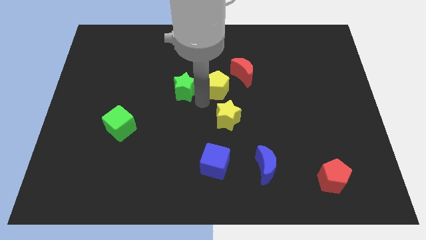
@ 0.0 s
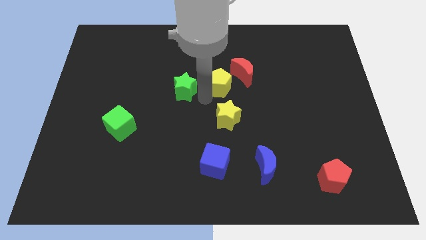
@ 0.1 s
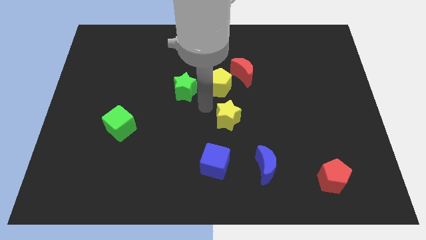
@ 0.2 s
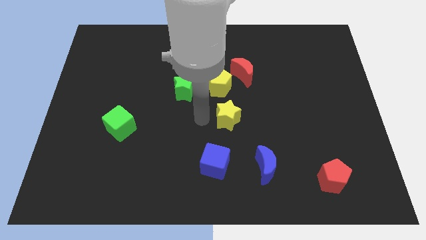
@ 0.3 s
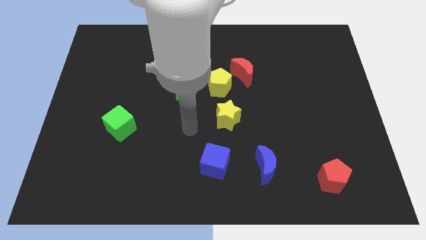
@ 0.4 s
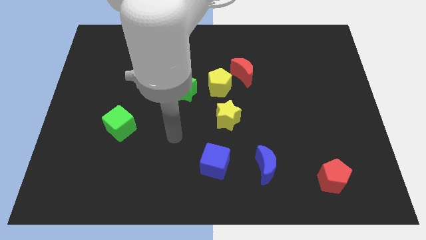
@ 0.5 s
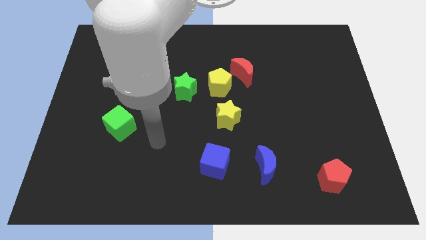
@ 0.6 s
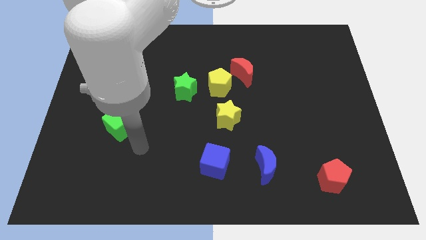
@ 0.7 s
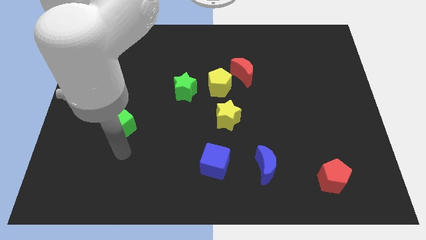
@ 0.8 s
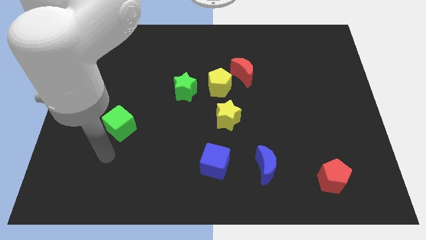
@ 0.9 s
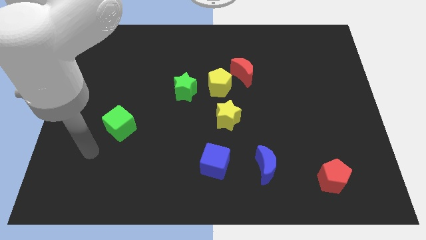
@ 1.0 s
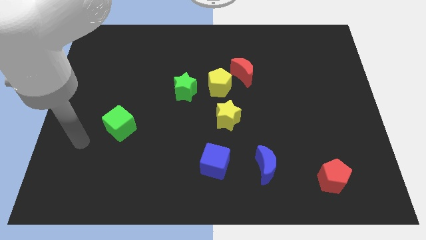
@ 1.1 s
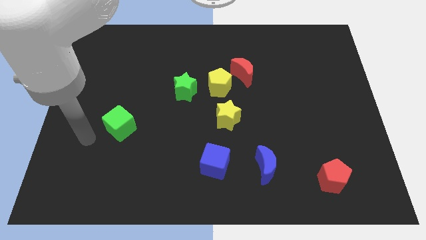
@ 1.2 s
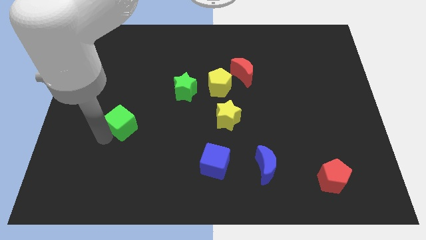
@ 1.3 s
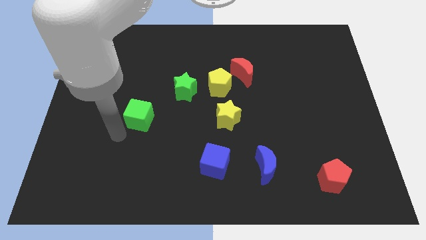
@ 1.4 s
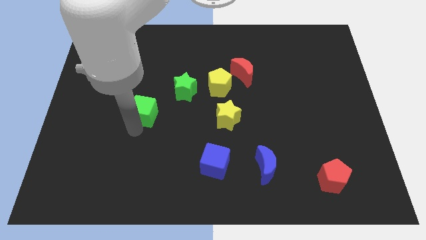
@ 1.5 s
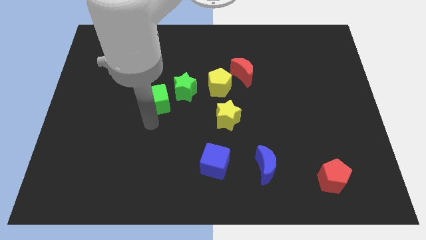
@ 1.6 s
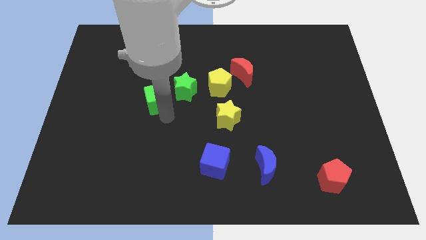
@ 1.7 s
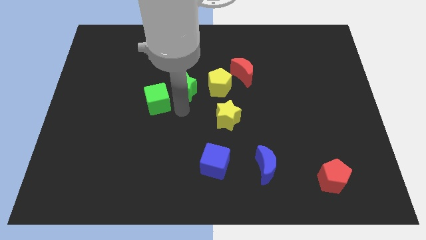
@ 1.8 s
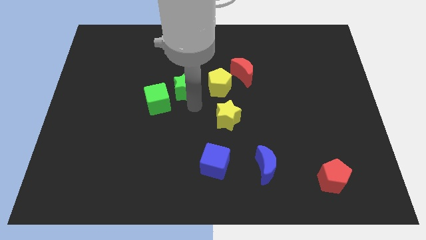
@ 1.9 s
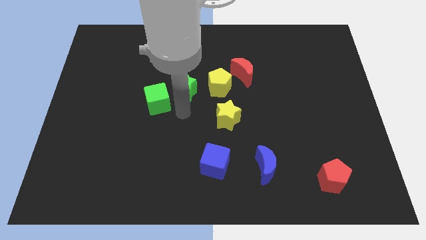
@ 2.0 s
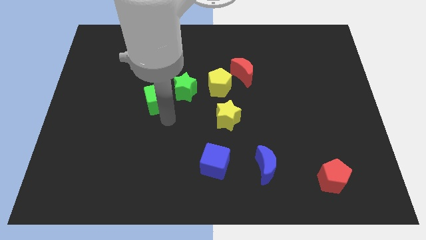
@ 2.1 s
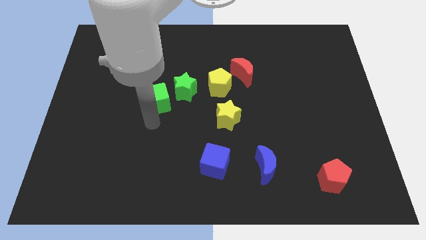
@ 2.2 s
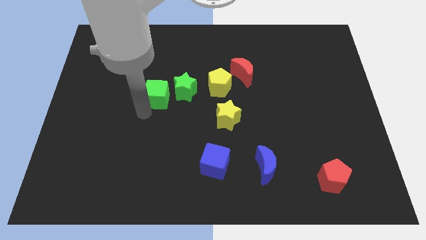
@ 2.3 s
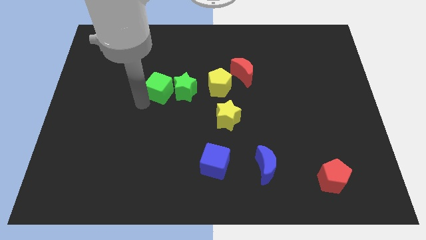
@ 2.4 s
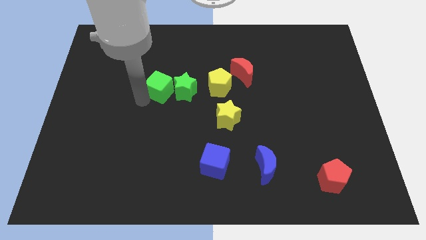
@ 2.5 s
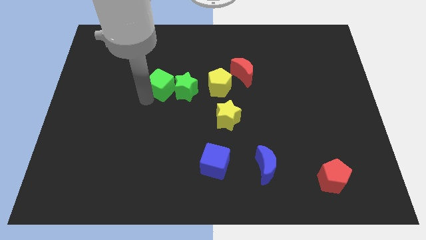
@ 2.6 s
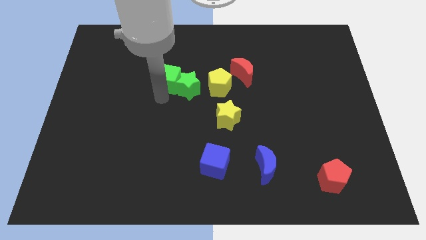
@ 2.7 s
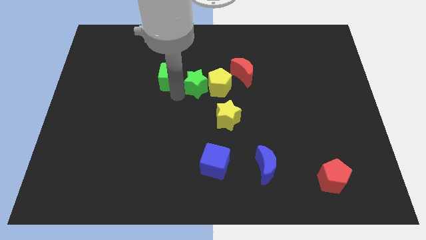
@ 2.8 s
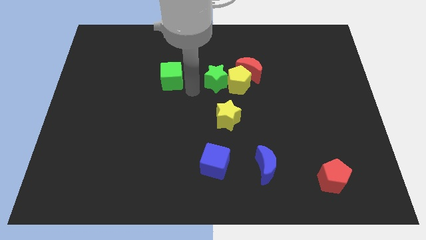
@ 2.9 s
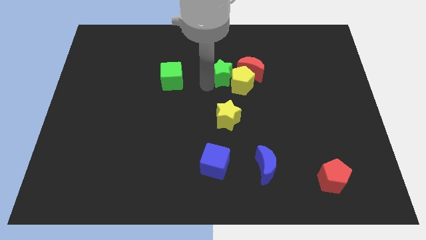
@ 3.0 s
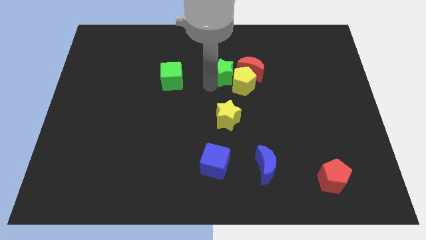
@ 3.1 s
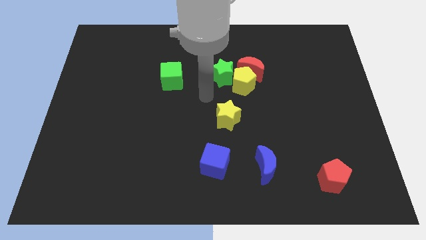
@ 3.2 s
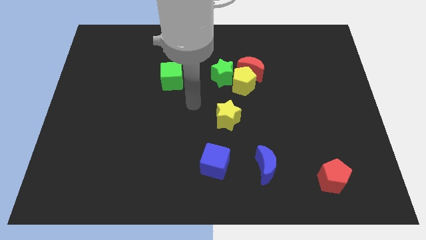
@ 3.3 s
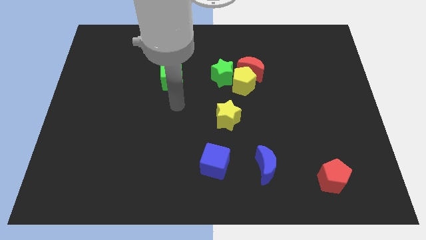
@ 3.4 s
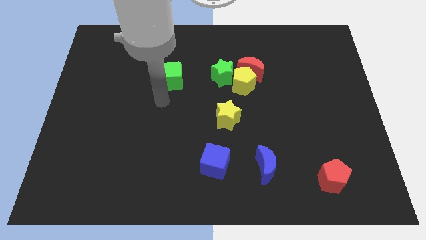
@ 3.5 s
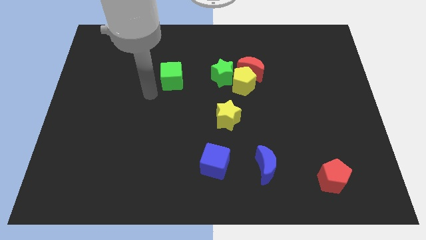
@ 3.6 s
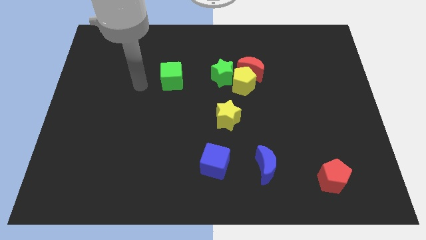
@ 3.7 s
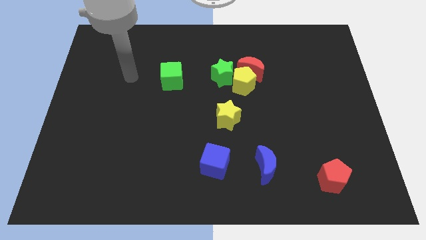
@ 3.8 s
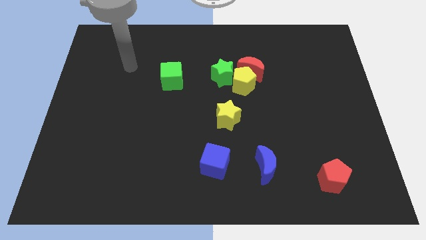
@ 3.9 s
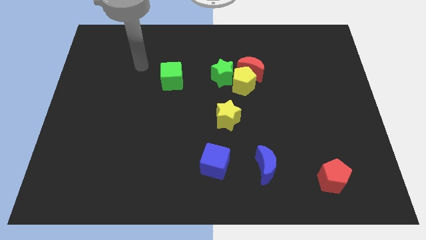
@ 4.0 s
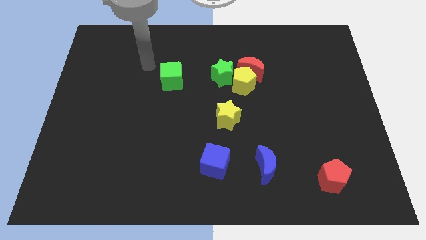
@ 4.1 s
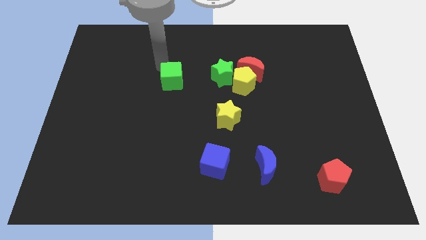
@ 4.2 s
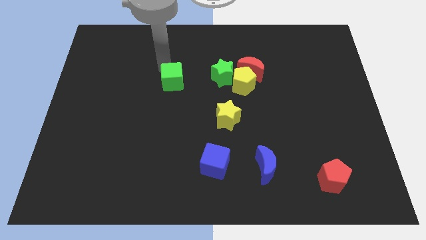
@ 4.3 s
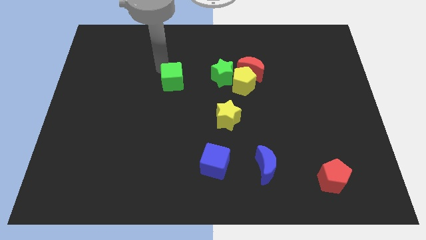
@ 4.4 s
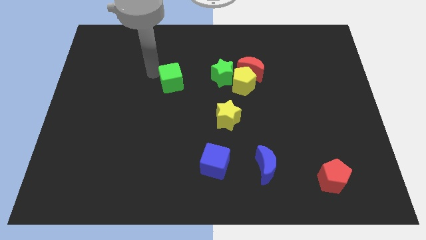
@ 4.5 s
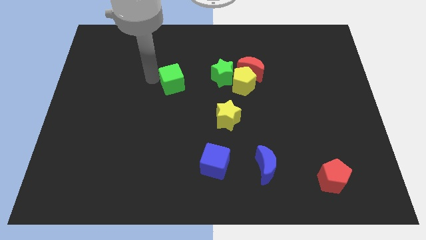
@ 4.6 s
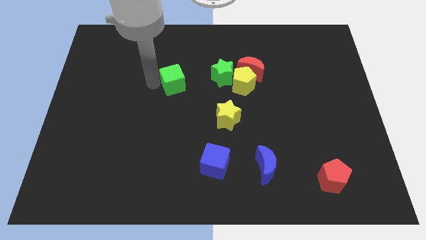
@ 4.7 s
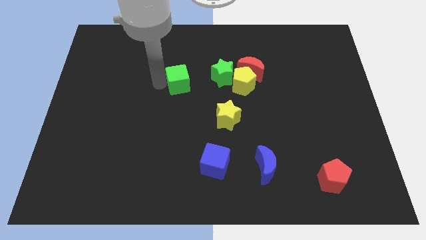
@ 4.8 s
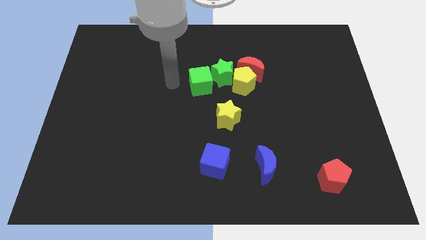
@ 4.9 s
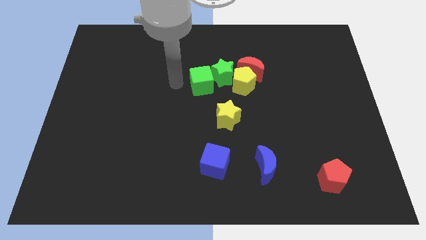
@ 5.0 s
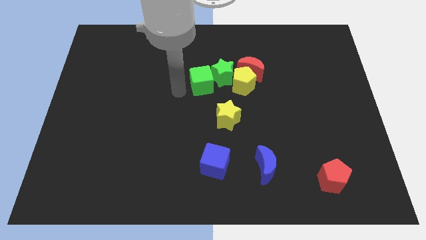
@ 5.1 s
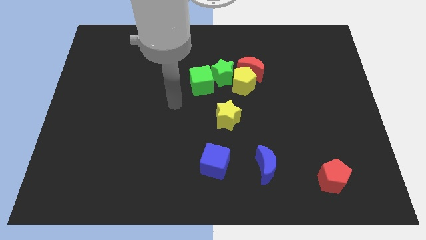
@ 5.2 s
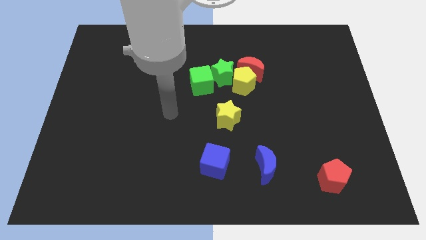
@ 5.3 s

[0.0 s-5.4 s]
push the green cube to the left side of the green star

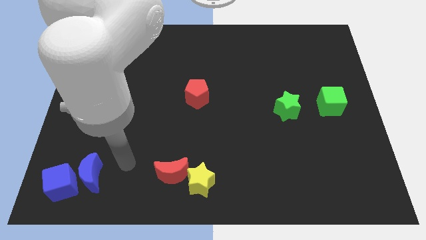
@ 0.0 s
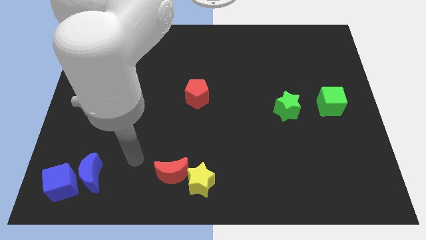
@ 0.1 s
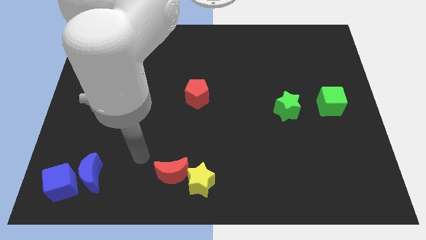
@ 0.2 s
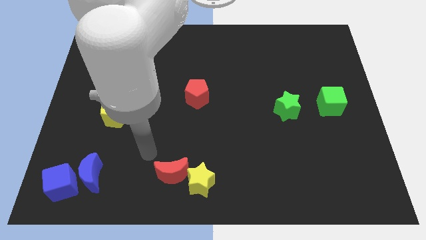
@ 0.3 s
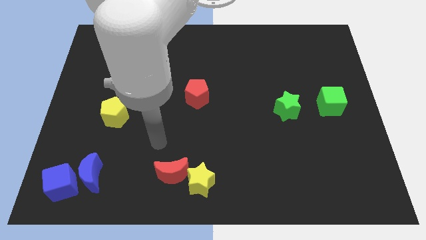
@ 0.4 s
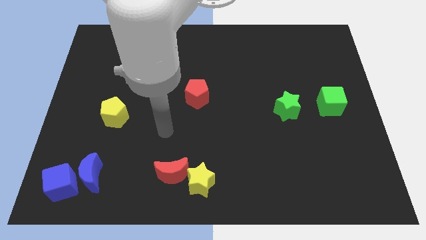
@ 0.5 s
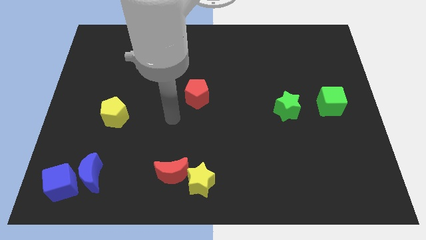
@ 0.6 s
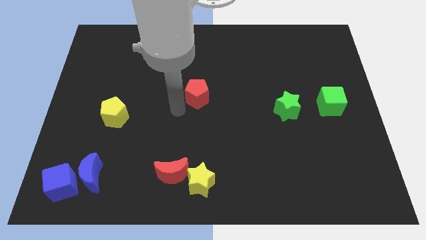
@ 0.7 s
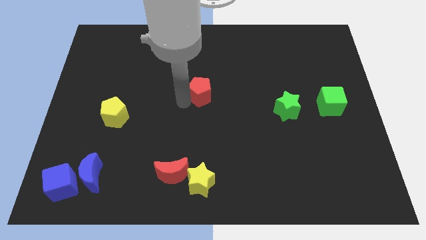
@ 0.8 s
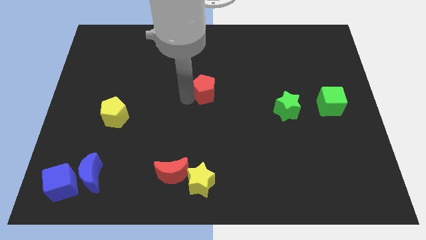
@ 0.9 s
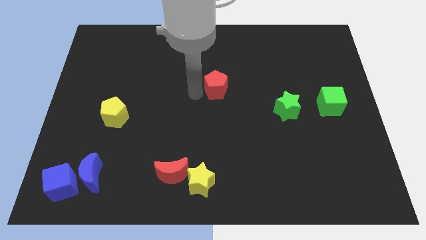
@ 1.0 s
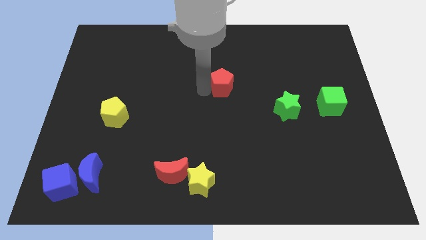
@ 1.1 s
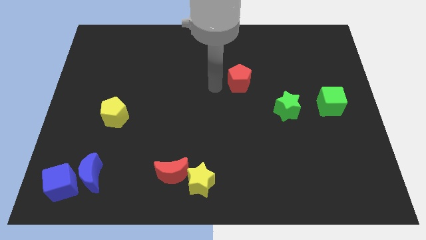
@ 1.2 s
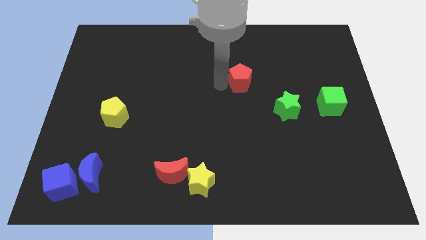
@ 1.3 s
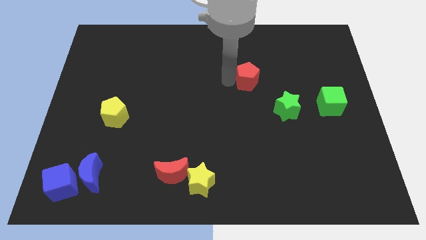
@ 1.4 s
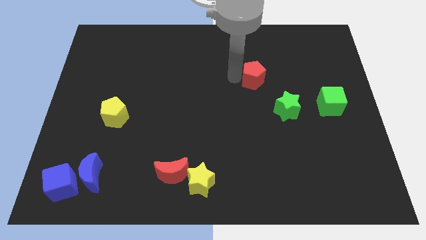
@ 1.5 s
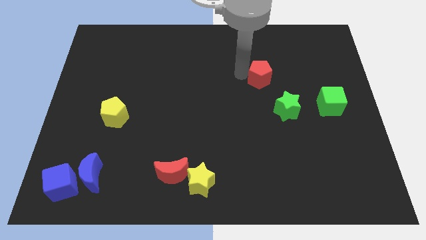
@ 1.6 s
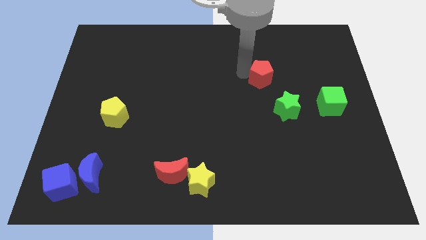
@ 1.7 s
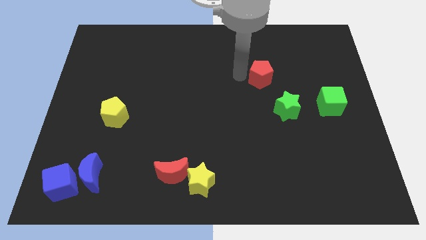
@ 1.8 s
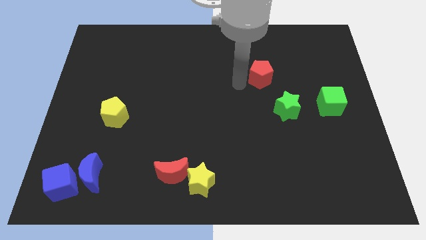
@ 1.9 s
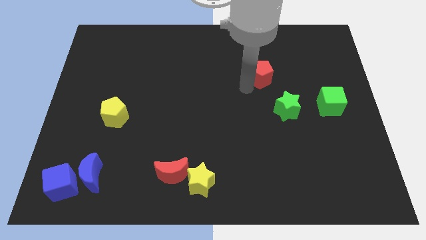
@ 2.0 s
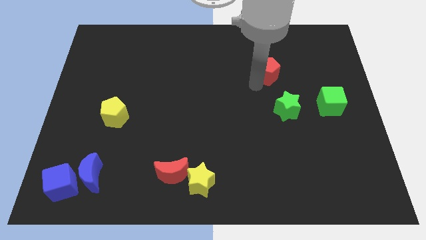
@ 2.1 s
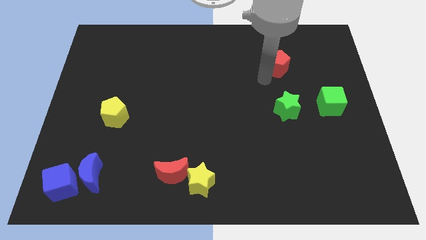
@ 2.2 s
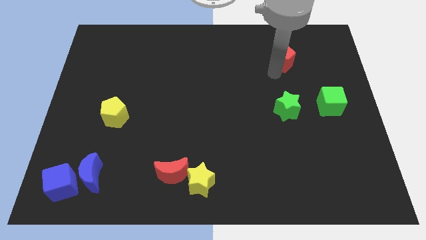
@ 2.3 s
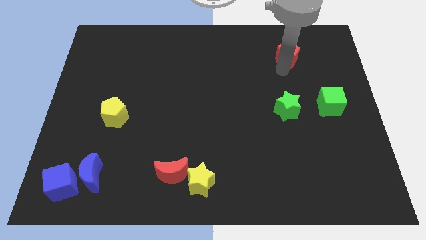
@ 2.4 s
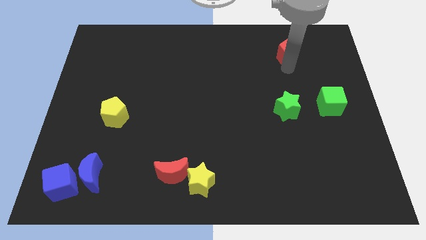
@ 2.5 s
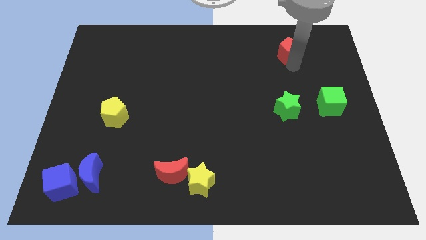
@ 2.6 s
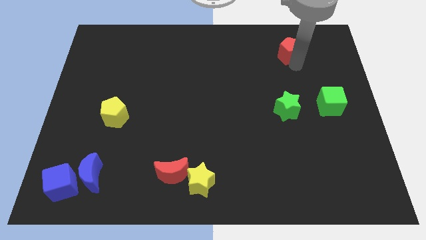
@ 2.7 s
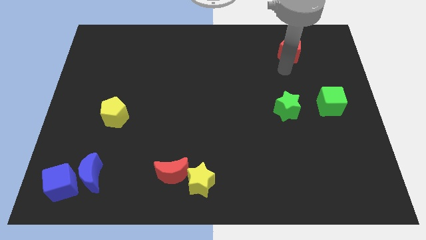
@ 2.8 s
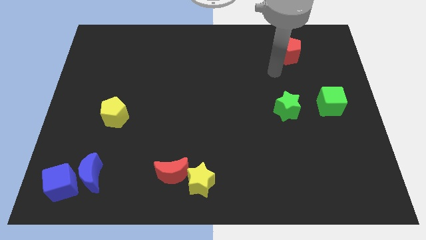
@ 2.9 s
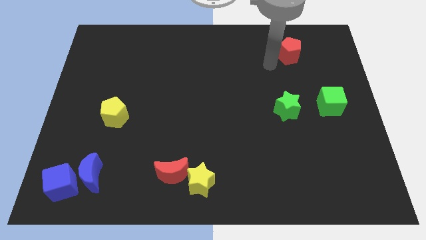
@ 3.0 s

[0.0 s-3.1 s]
place the red pentagon vertically above the green star

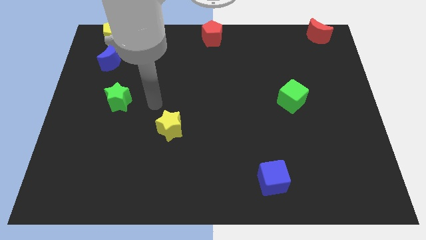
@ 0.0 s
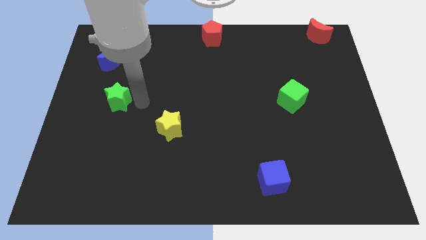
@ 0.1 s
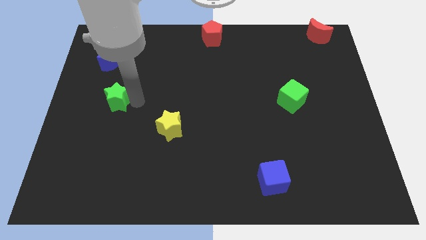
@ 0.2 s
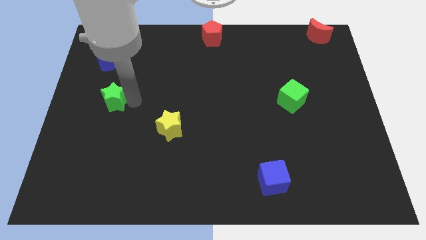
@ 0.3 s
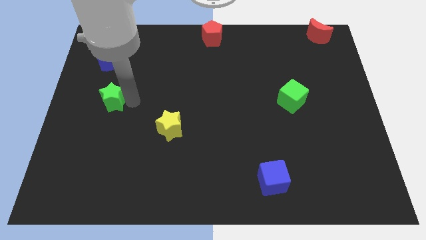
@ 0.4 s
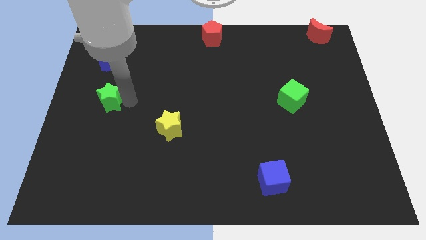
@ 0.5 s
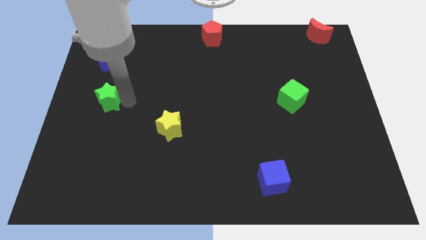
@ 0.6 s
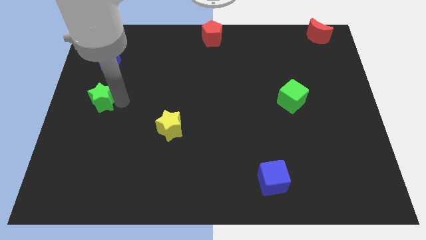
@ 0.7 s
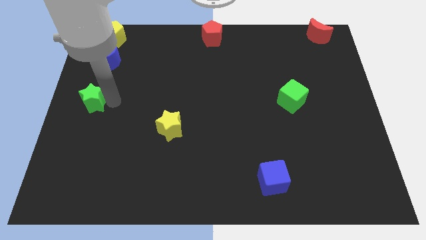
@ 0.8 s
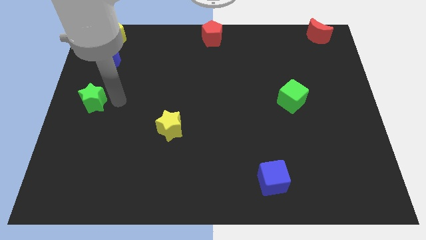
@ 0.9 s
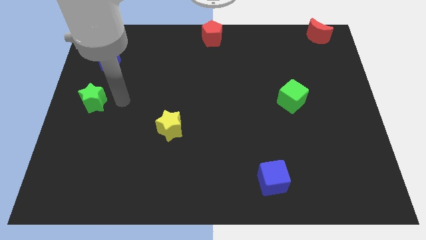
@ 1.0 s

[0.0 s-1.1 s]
place the green star below the blue crescent to form a vertical line
